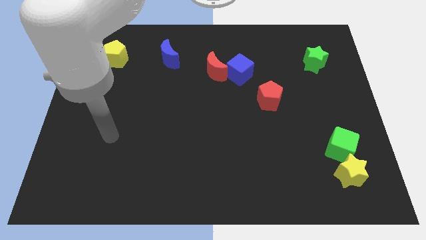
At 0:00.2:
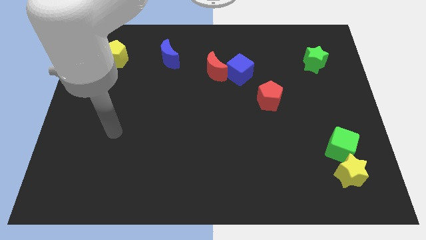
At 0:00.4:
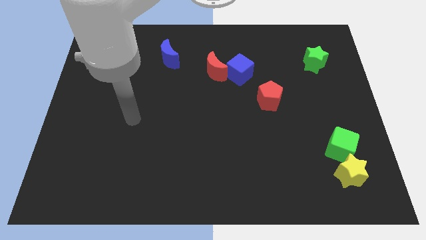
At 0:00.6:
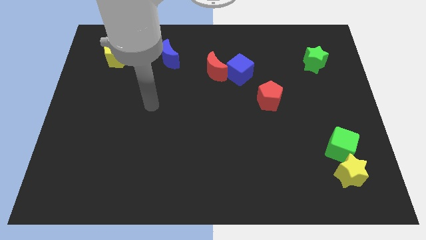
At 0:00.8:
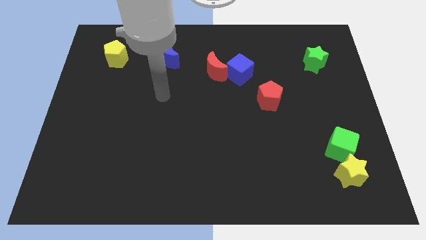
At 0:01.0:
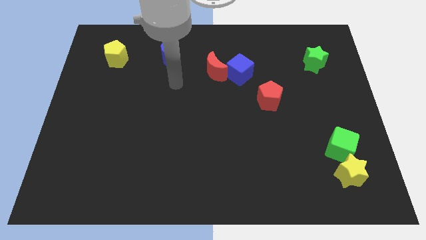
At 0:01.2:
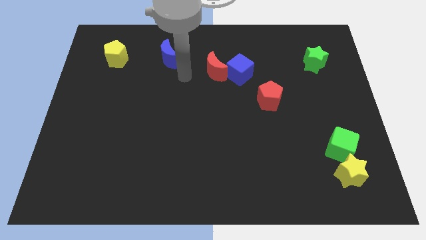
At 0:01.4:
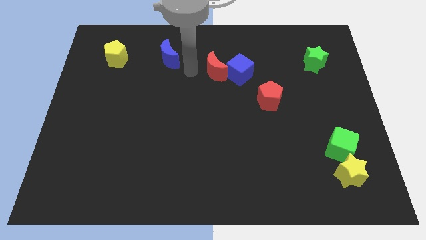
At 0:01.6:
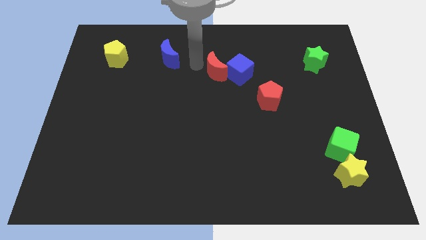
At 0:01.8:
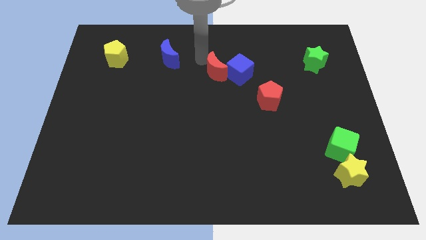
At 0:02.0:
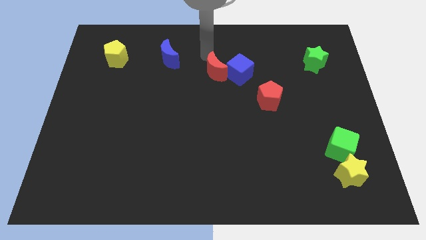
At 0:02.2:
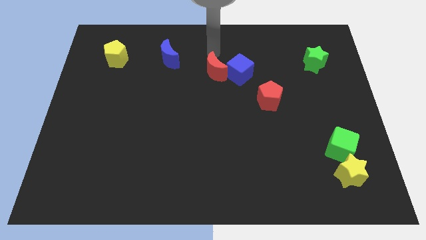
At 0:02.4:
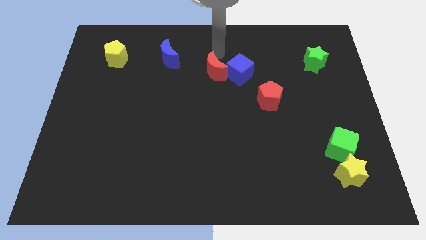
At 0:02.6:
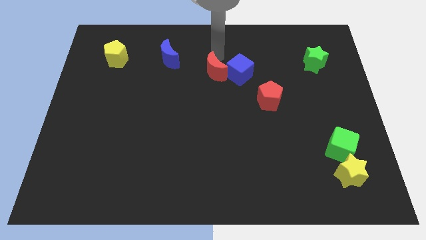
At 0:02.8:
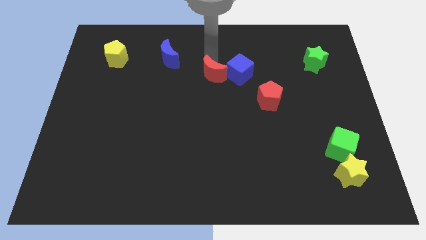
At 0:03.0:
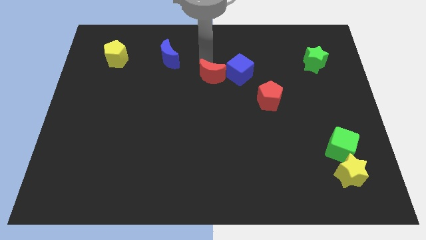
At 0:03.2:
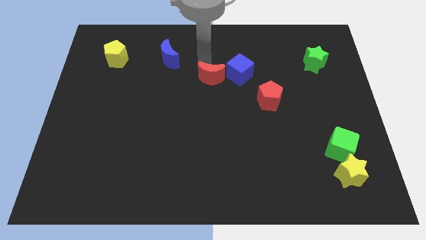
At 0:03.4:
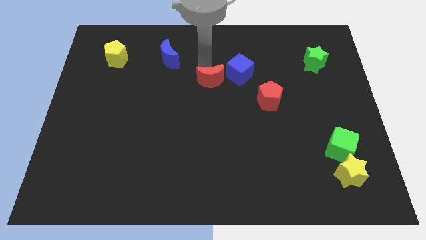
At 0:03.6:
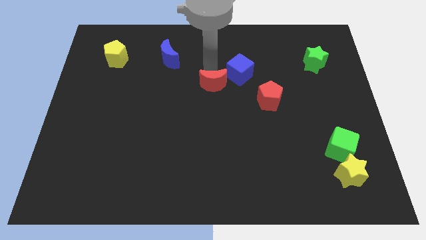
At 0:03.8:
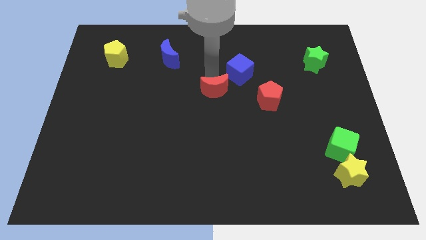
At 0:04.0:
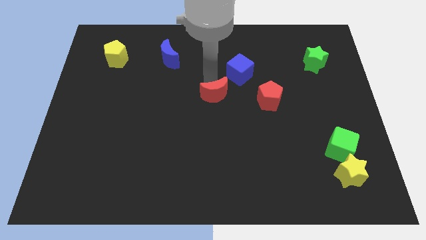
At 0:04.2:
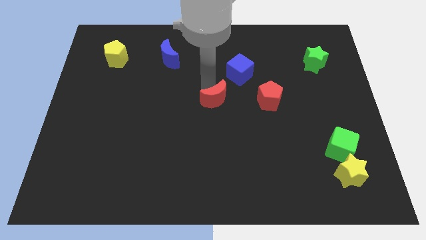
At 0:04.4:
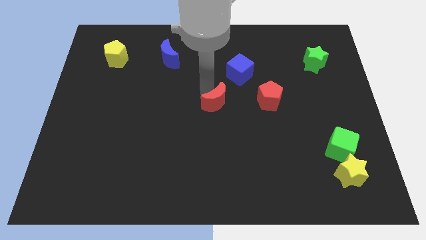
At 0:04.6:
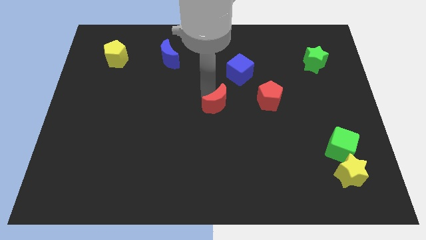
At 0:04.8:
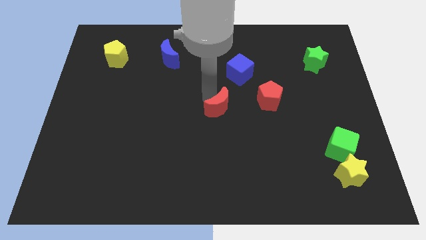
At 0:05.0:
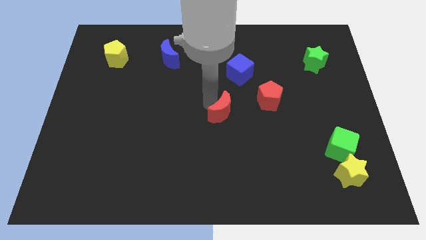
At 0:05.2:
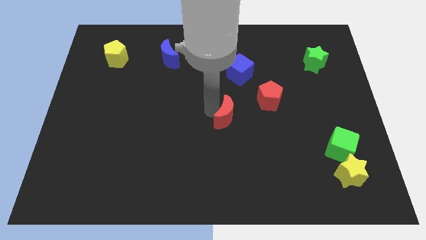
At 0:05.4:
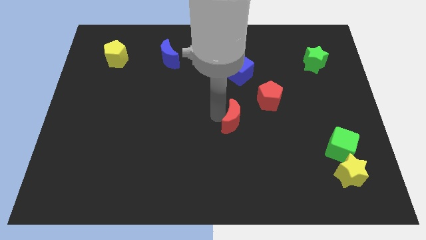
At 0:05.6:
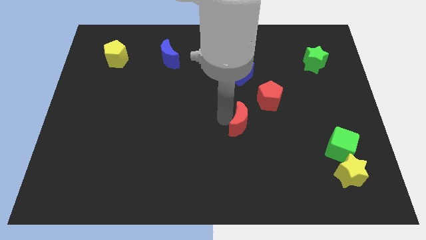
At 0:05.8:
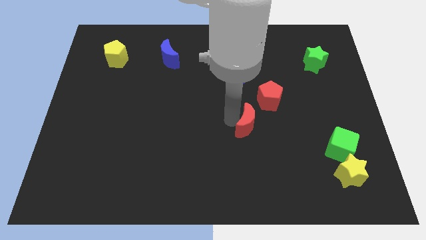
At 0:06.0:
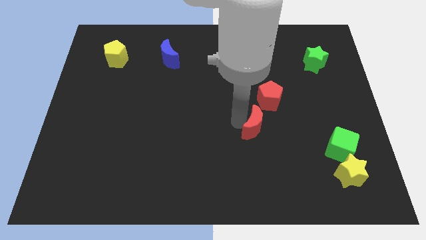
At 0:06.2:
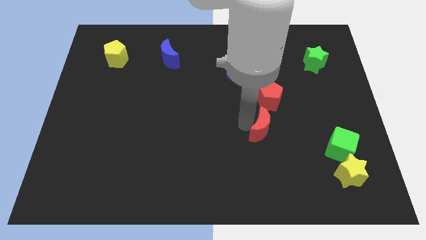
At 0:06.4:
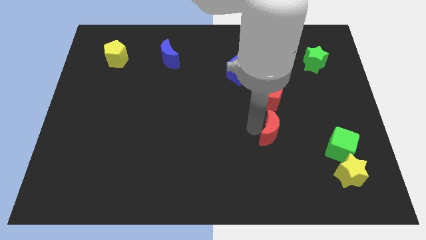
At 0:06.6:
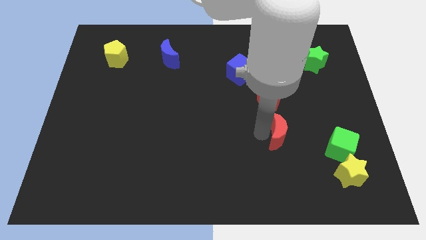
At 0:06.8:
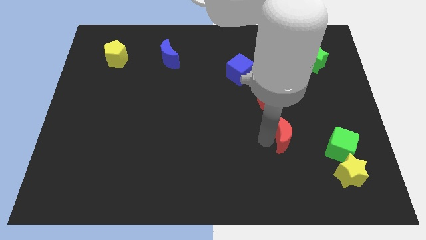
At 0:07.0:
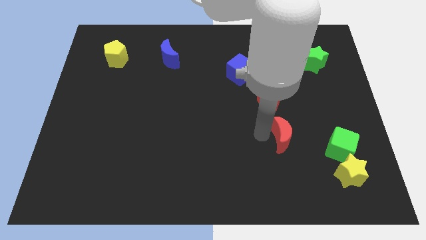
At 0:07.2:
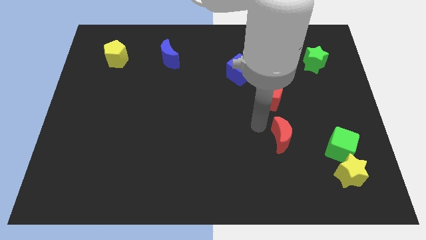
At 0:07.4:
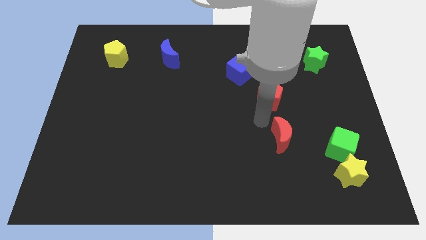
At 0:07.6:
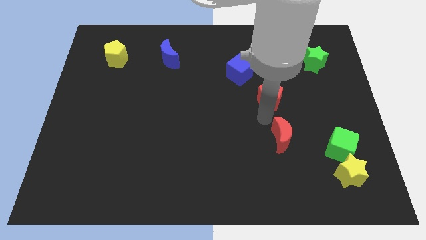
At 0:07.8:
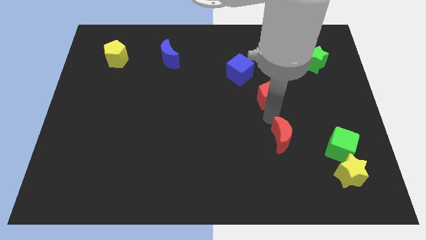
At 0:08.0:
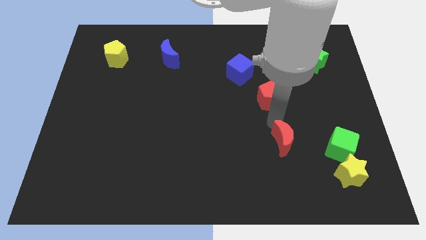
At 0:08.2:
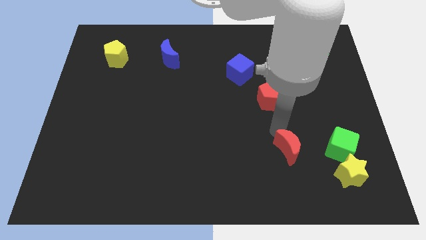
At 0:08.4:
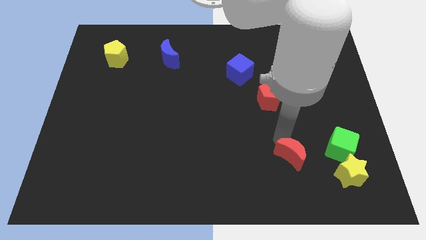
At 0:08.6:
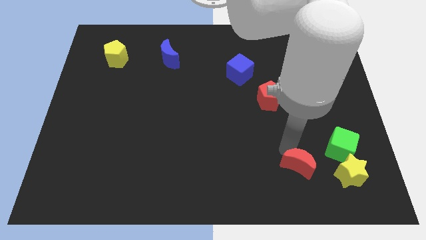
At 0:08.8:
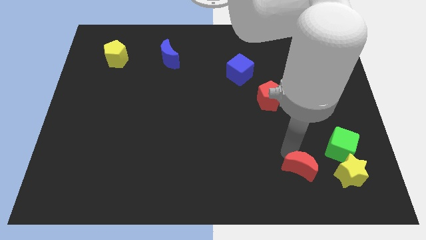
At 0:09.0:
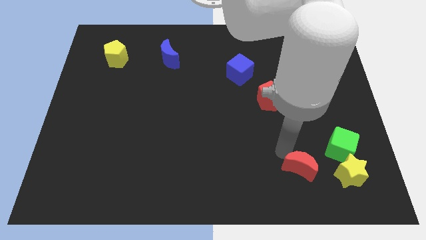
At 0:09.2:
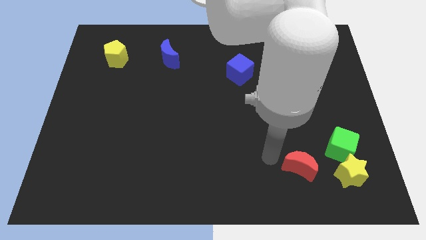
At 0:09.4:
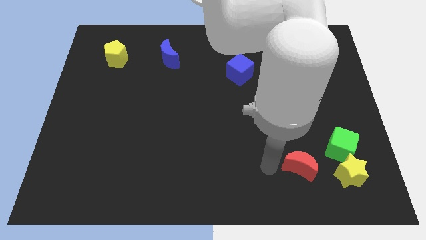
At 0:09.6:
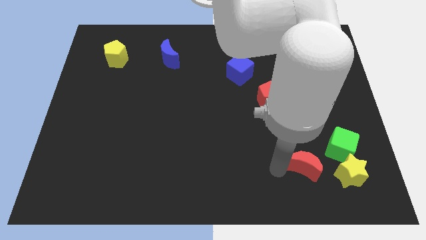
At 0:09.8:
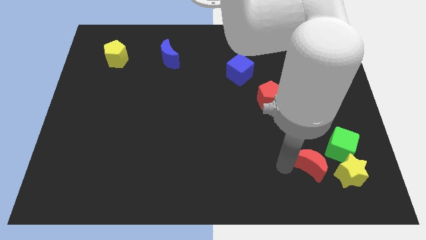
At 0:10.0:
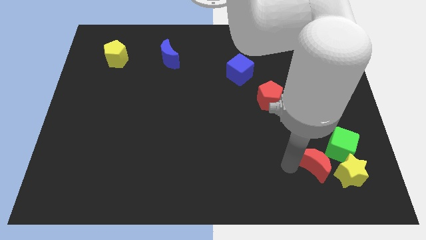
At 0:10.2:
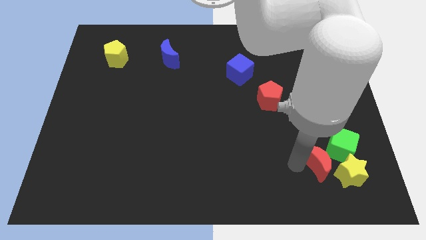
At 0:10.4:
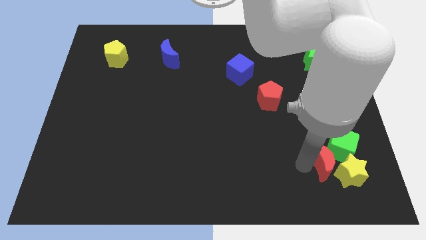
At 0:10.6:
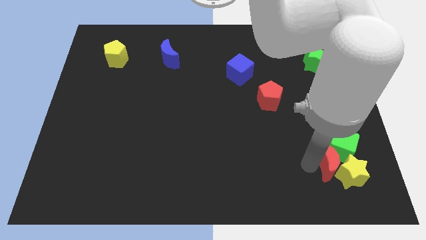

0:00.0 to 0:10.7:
slide the red moon to the yellow star

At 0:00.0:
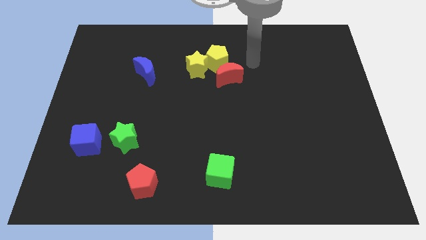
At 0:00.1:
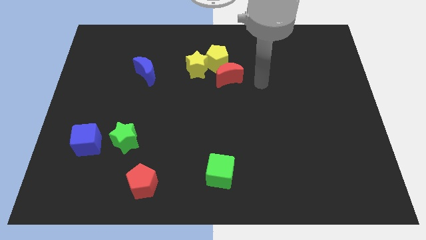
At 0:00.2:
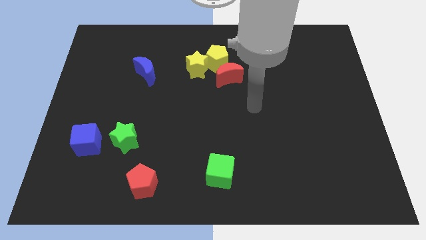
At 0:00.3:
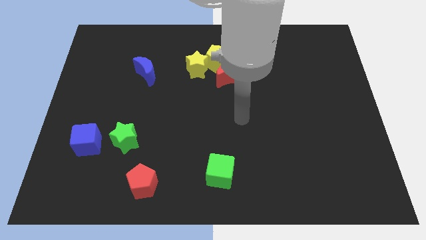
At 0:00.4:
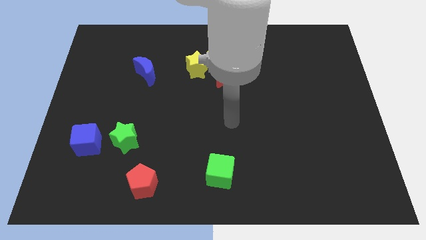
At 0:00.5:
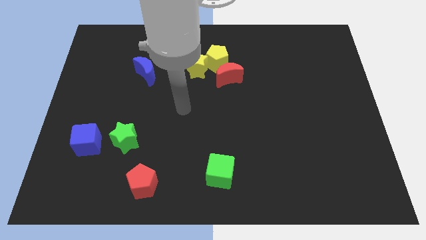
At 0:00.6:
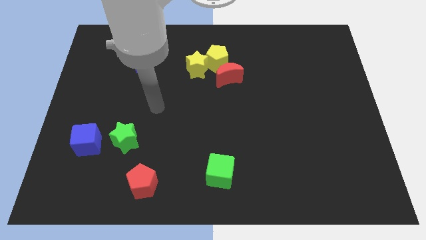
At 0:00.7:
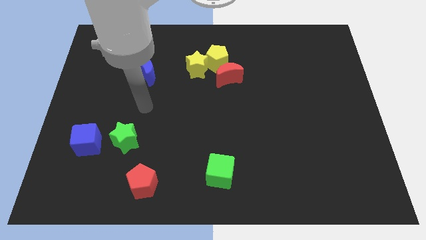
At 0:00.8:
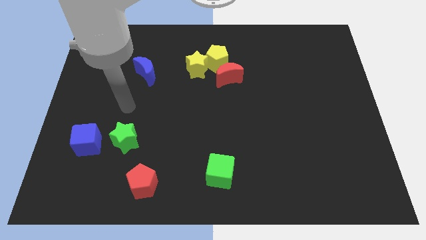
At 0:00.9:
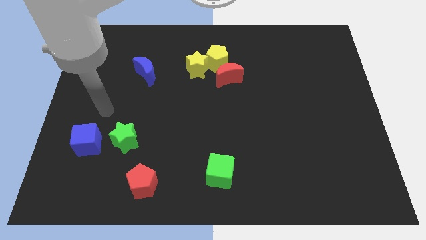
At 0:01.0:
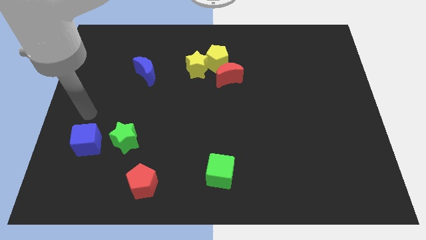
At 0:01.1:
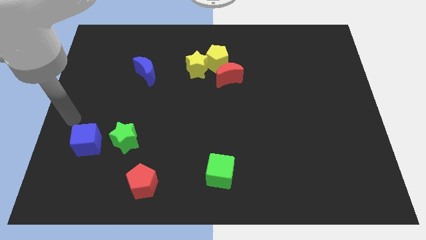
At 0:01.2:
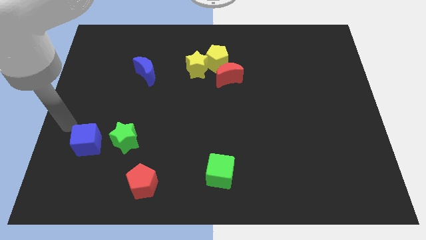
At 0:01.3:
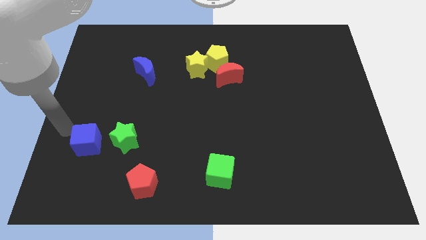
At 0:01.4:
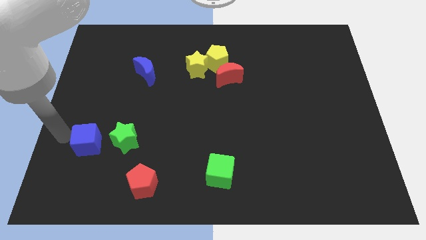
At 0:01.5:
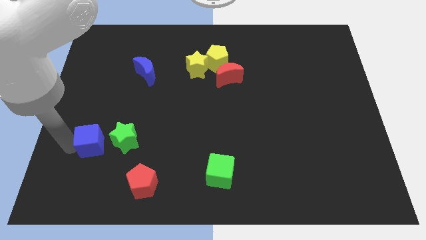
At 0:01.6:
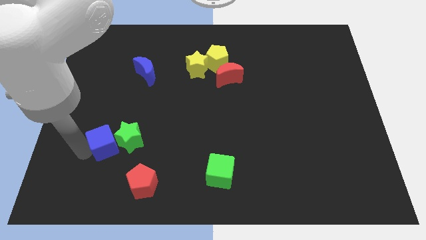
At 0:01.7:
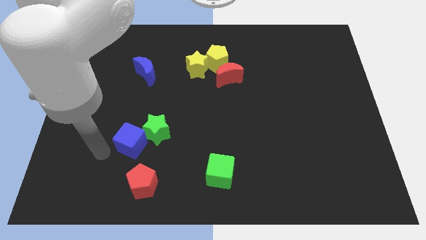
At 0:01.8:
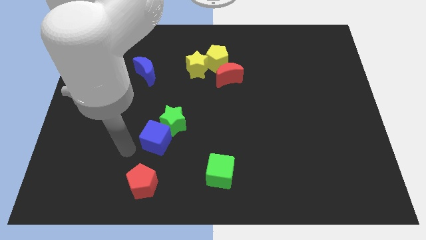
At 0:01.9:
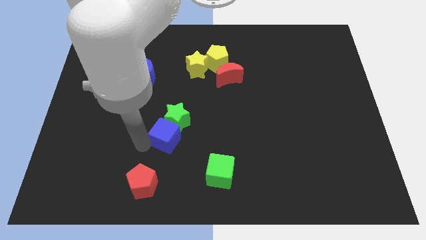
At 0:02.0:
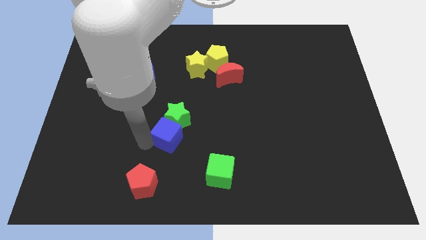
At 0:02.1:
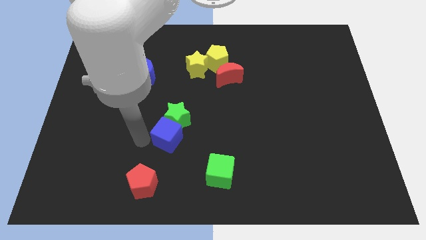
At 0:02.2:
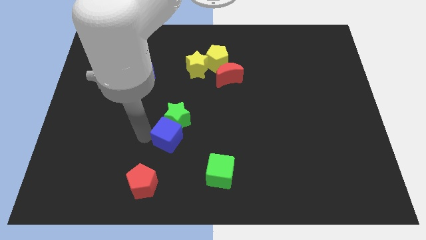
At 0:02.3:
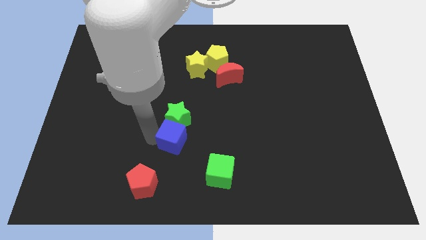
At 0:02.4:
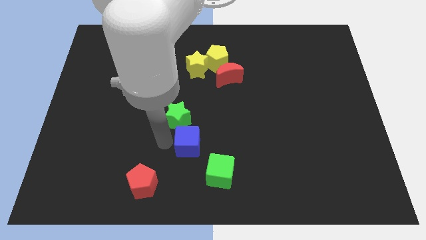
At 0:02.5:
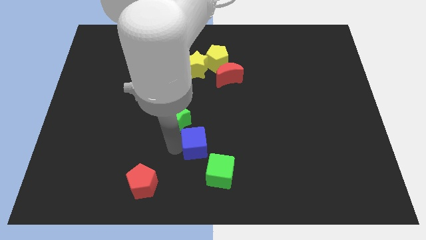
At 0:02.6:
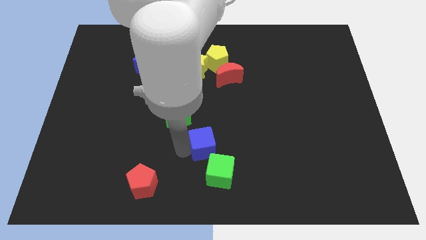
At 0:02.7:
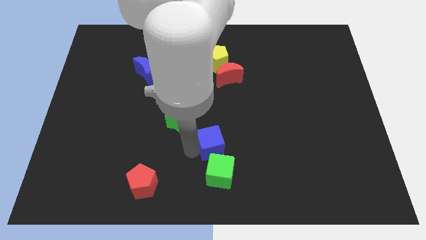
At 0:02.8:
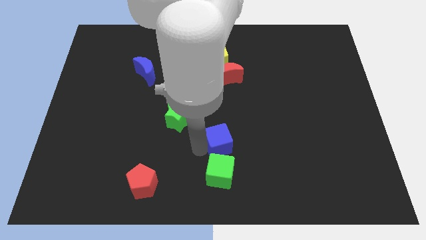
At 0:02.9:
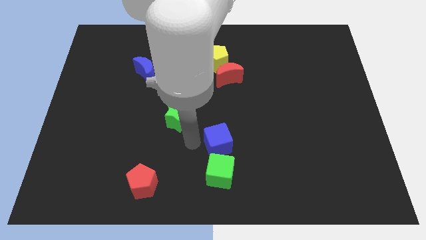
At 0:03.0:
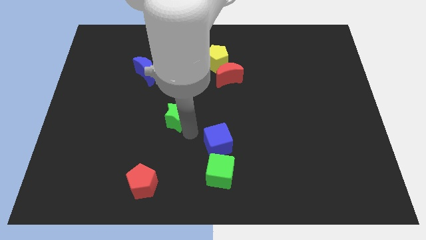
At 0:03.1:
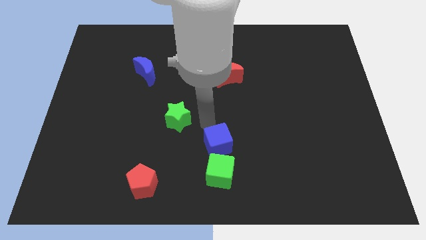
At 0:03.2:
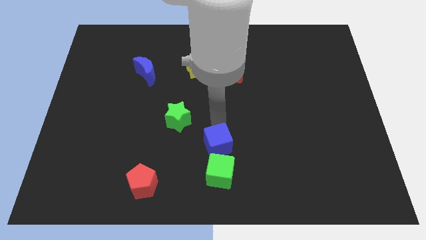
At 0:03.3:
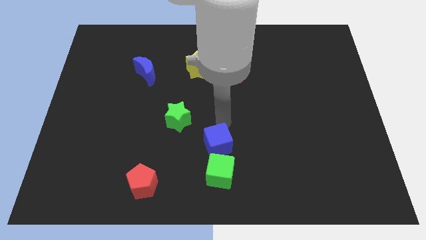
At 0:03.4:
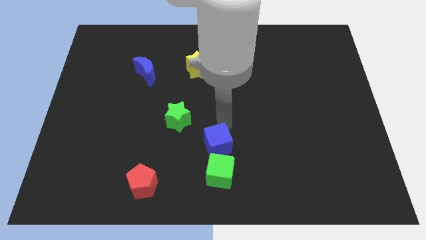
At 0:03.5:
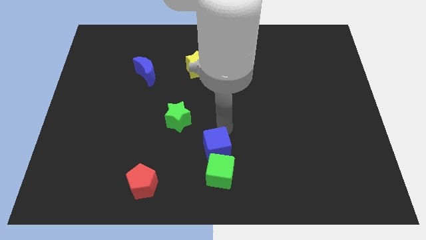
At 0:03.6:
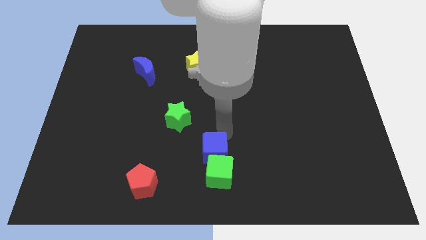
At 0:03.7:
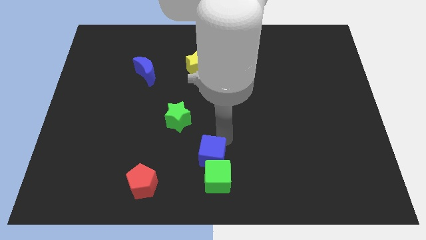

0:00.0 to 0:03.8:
push the blue cube close to the green cube
